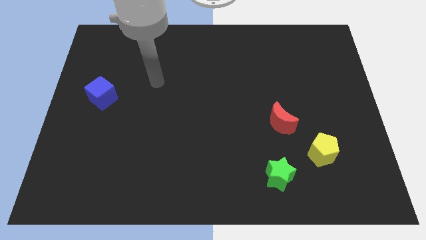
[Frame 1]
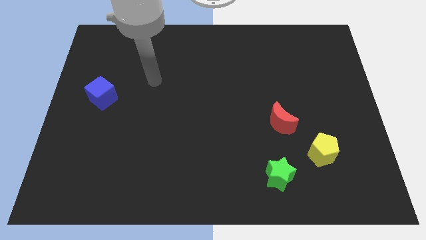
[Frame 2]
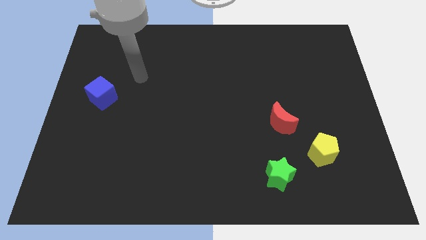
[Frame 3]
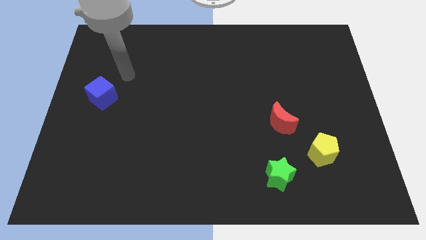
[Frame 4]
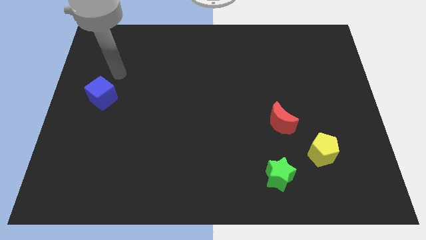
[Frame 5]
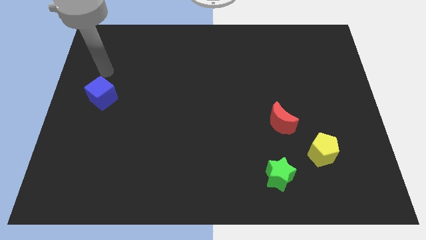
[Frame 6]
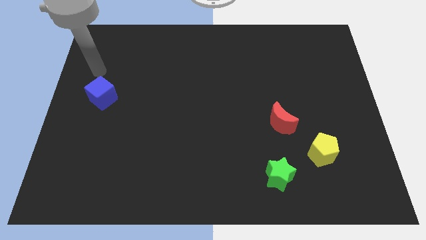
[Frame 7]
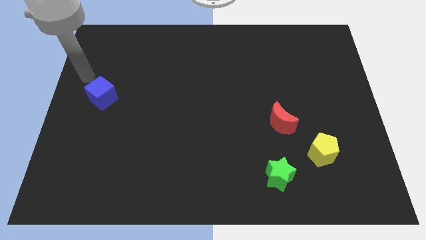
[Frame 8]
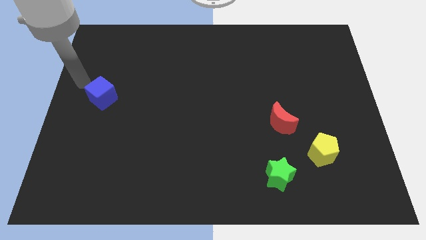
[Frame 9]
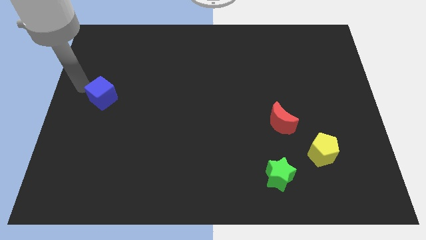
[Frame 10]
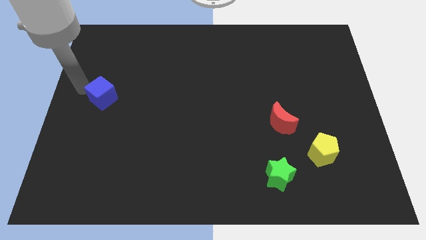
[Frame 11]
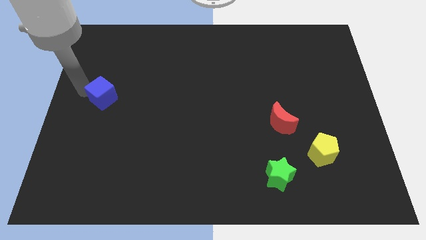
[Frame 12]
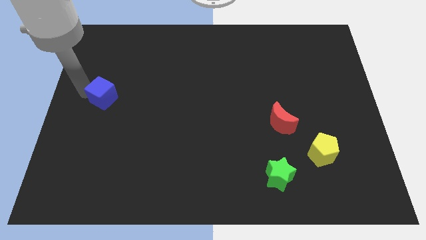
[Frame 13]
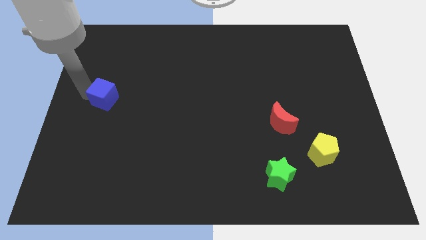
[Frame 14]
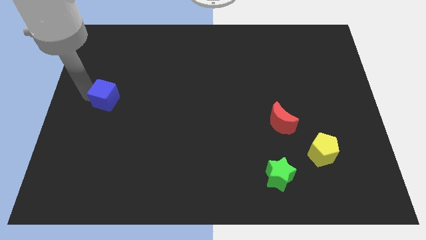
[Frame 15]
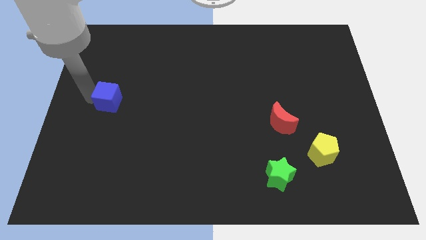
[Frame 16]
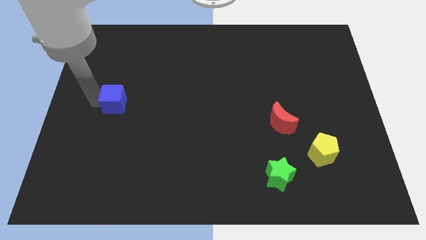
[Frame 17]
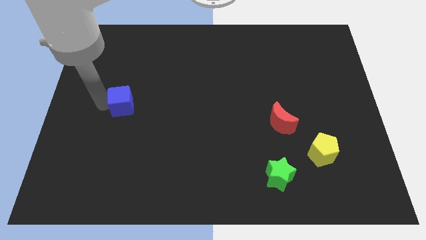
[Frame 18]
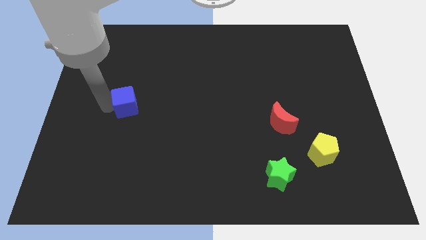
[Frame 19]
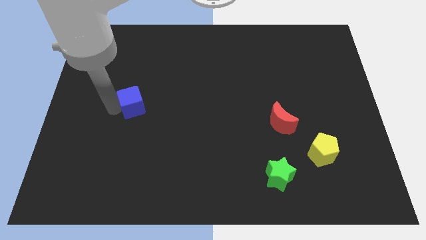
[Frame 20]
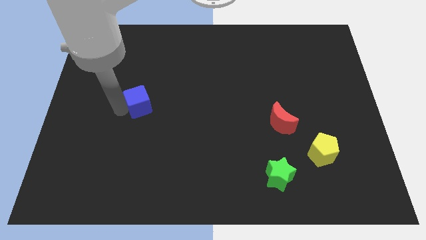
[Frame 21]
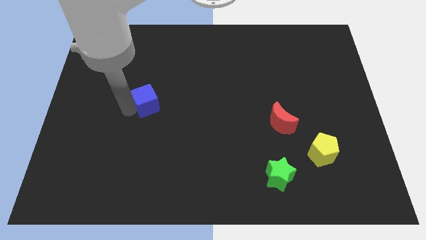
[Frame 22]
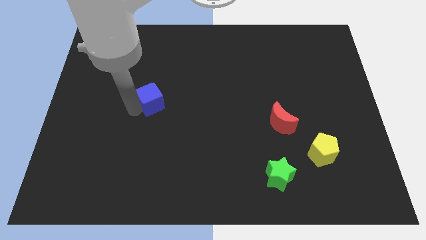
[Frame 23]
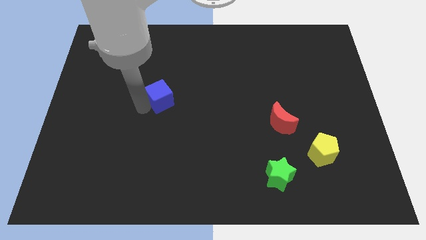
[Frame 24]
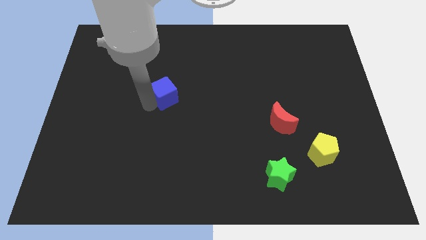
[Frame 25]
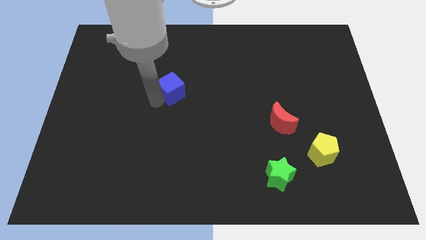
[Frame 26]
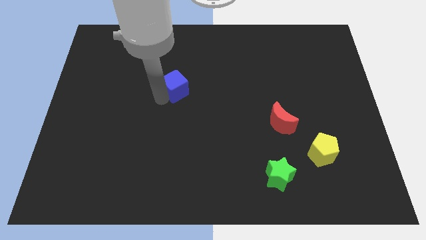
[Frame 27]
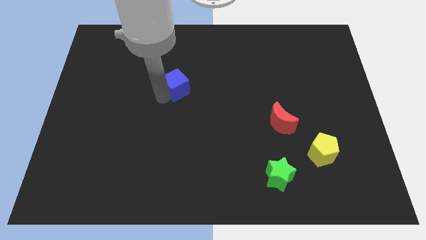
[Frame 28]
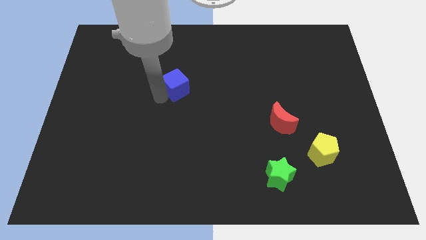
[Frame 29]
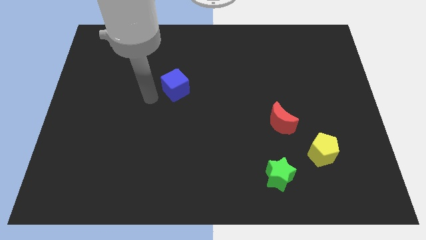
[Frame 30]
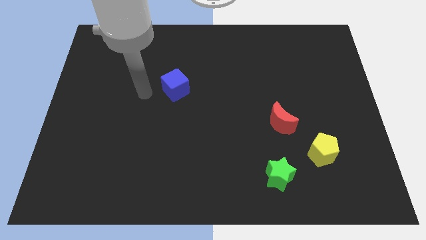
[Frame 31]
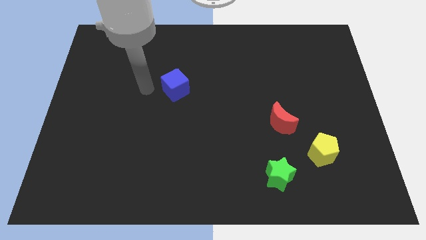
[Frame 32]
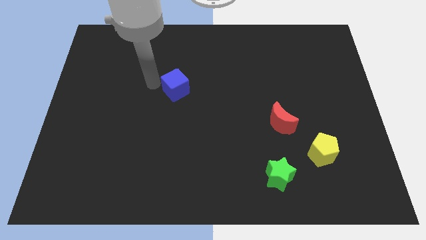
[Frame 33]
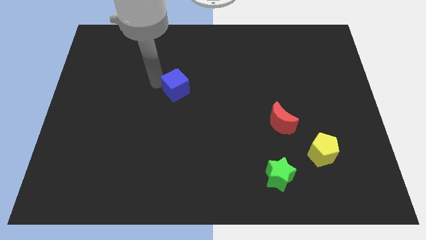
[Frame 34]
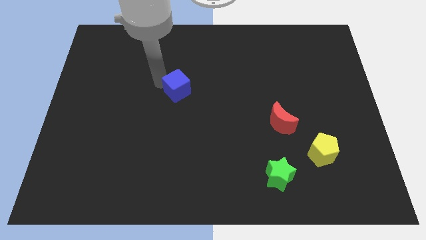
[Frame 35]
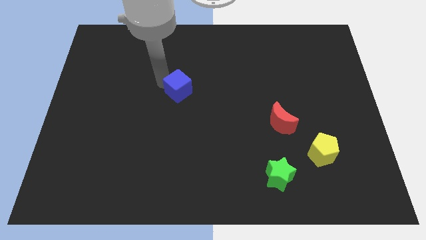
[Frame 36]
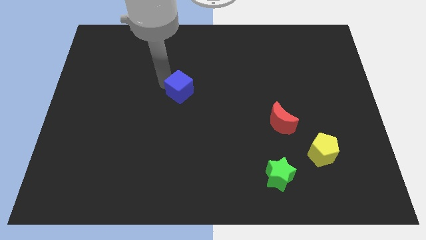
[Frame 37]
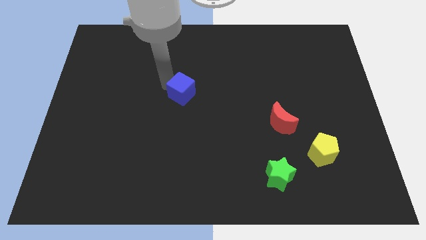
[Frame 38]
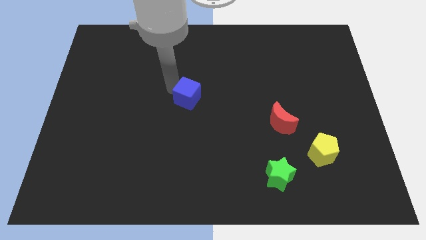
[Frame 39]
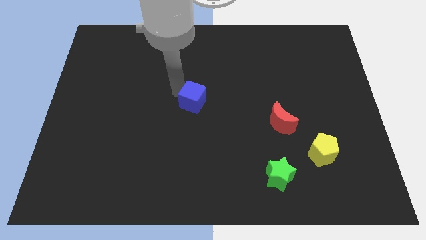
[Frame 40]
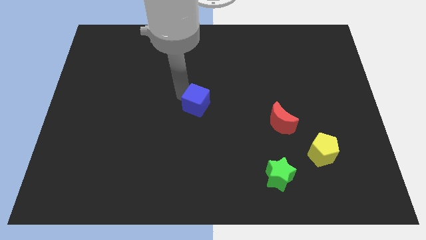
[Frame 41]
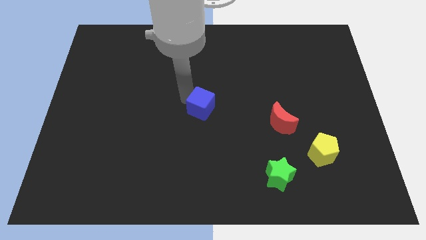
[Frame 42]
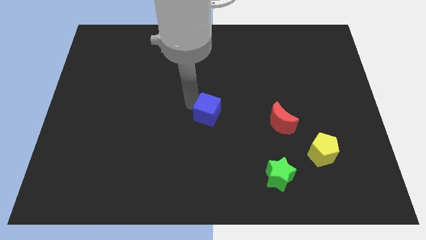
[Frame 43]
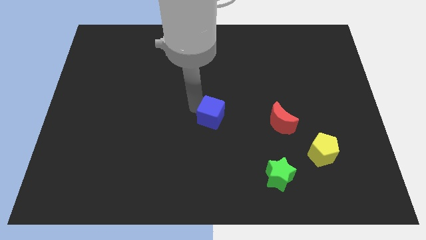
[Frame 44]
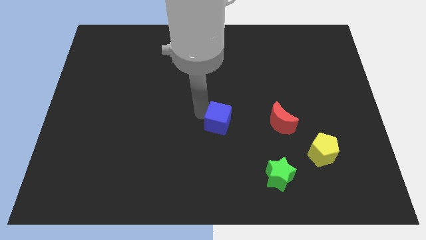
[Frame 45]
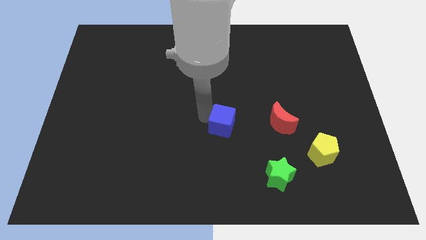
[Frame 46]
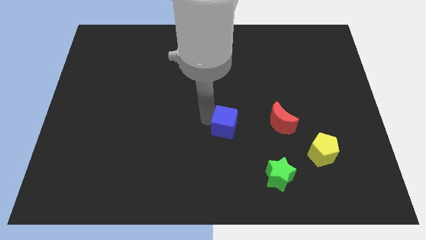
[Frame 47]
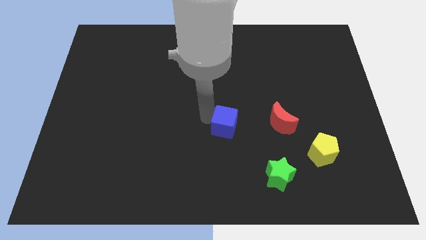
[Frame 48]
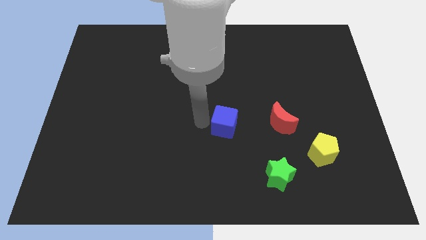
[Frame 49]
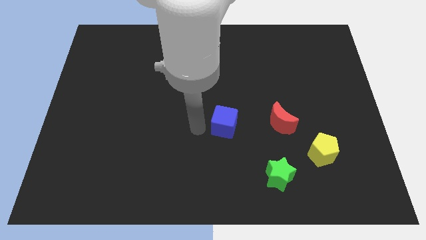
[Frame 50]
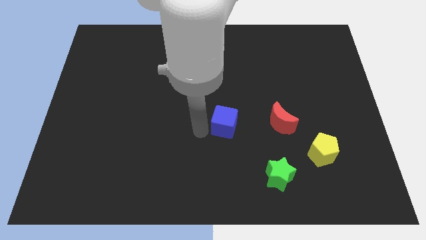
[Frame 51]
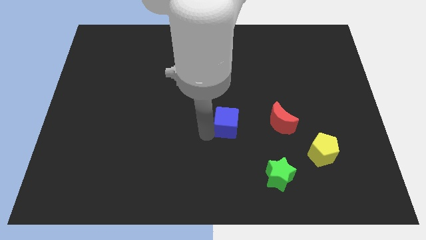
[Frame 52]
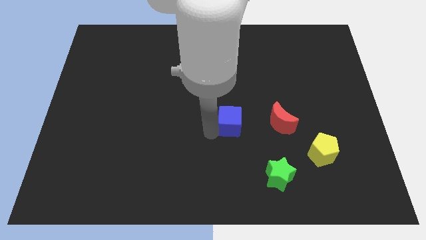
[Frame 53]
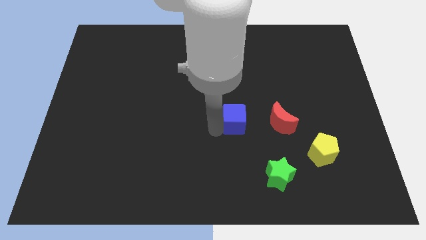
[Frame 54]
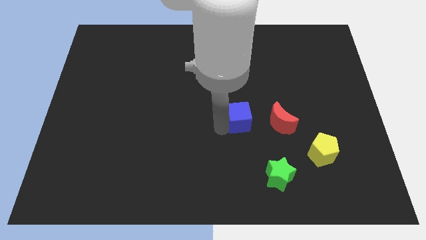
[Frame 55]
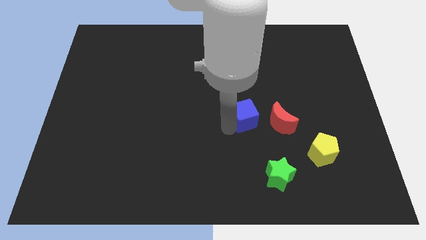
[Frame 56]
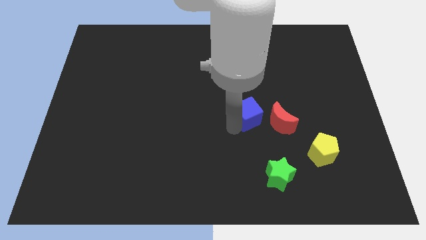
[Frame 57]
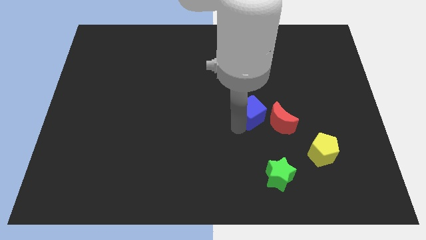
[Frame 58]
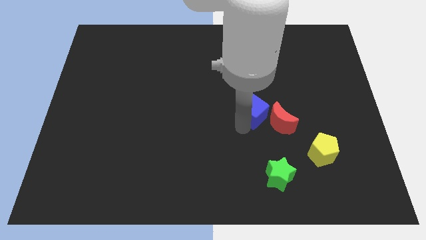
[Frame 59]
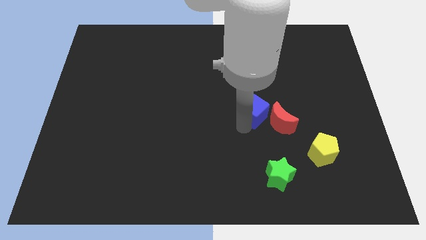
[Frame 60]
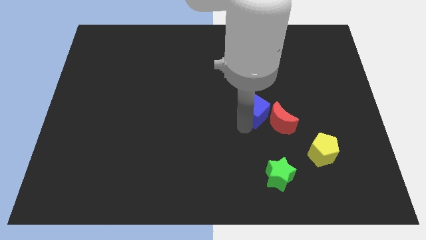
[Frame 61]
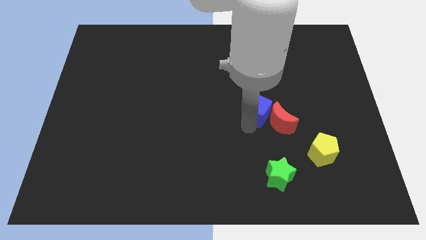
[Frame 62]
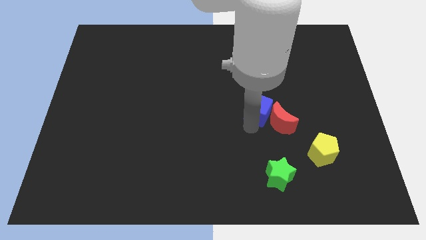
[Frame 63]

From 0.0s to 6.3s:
put the blue block to the moon

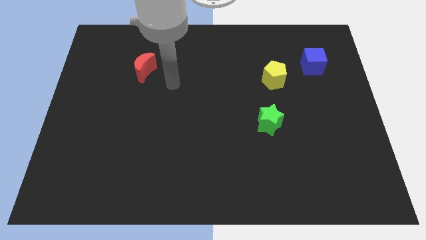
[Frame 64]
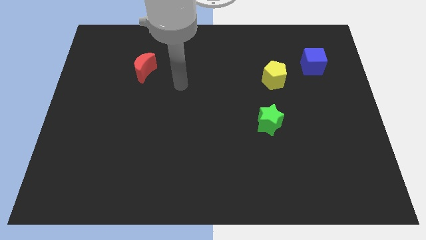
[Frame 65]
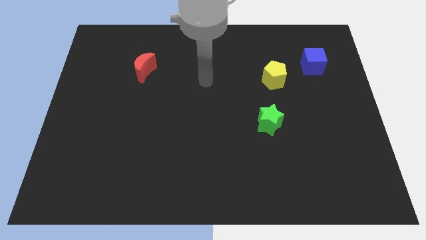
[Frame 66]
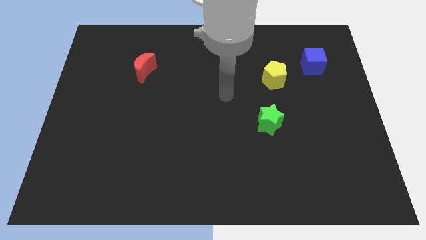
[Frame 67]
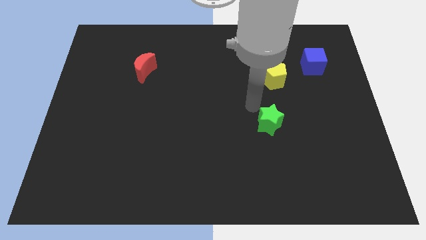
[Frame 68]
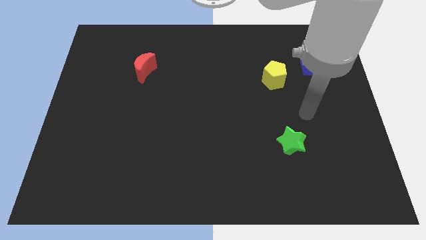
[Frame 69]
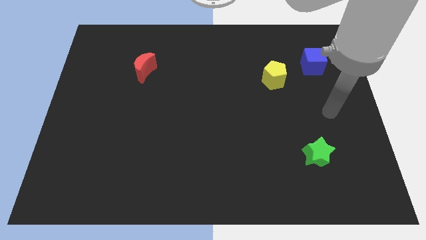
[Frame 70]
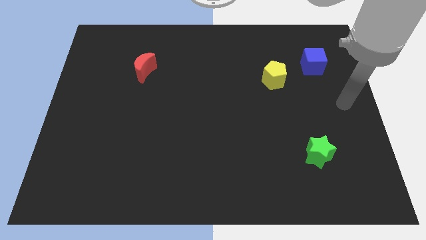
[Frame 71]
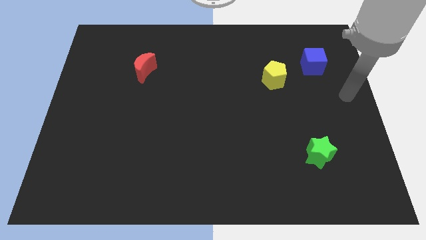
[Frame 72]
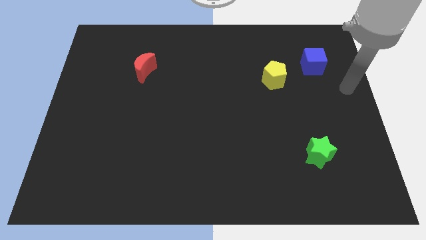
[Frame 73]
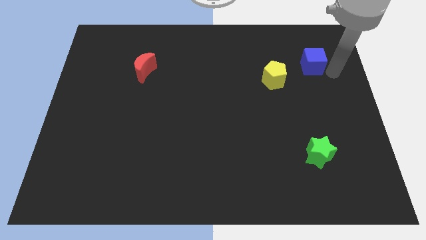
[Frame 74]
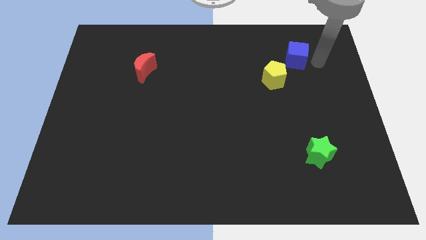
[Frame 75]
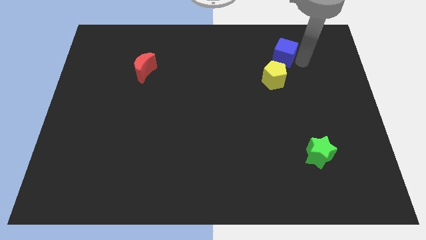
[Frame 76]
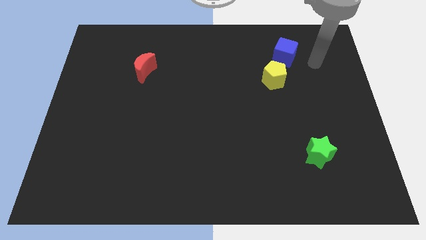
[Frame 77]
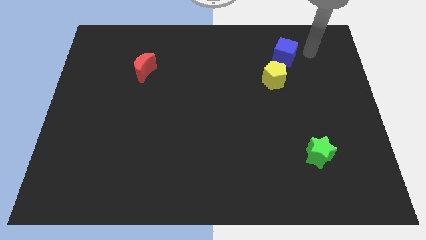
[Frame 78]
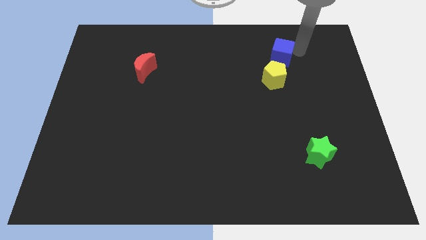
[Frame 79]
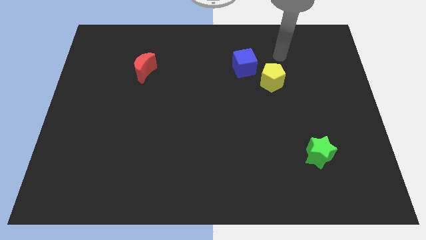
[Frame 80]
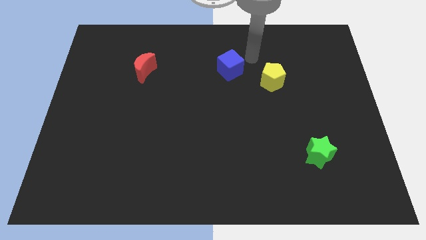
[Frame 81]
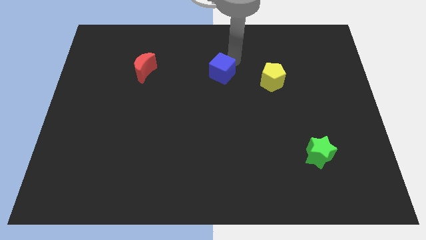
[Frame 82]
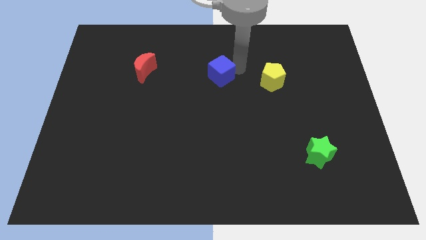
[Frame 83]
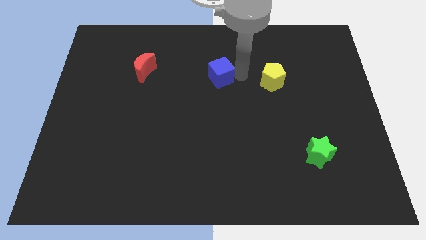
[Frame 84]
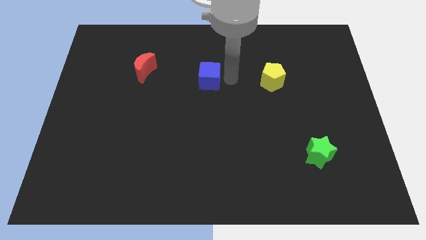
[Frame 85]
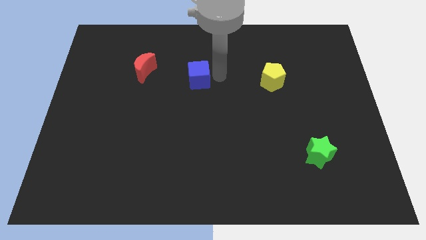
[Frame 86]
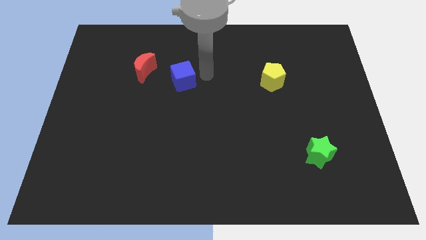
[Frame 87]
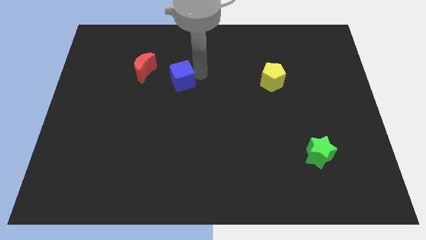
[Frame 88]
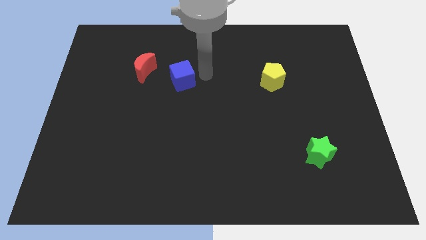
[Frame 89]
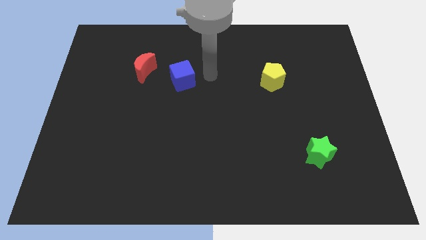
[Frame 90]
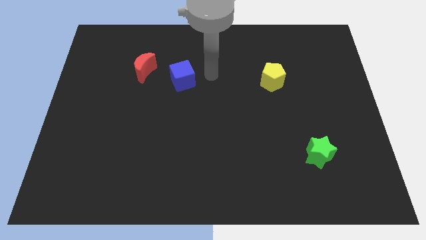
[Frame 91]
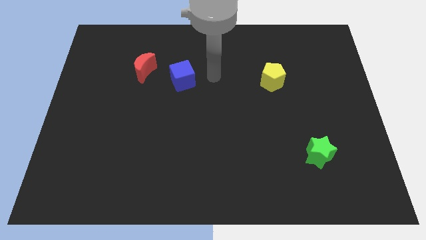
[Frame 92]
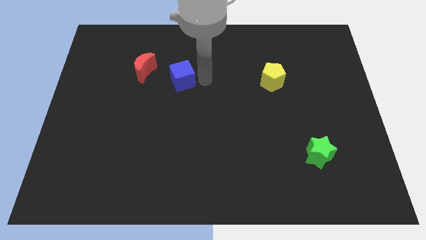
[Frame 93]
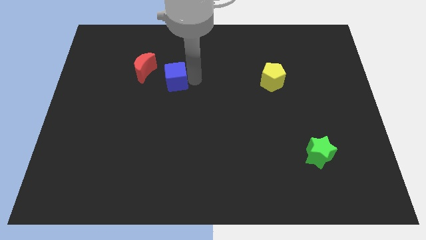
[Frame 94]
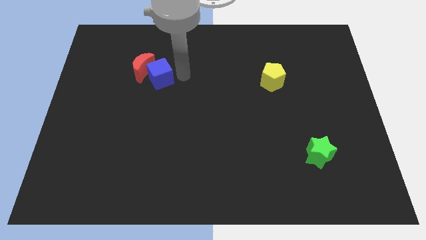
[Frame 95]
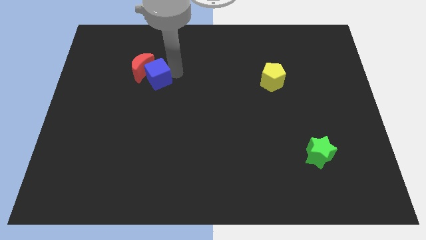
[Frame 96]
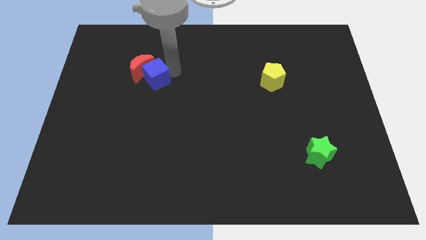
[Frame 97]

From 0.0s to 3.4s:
put the cube towards the red moon
